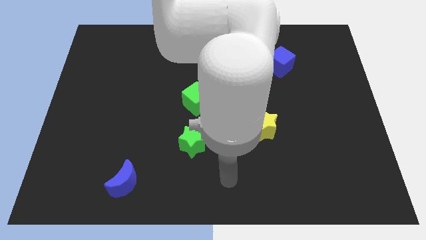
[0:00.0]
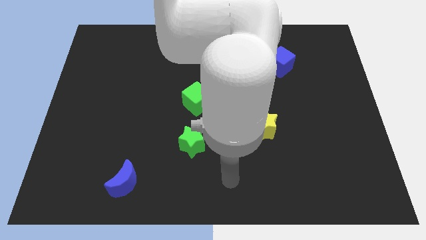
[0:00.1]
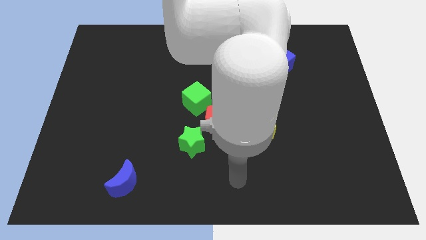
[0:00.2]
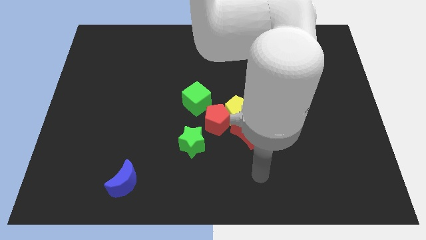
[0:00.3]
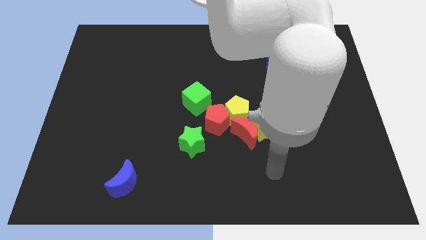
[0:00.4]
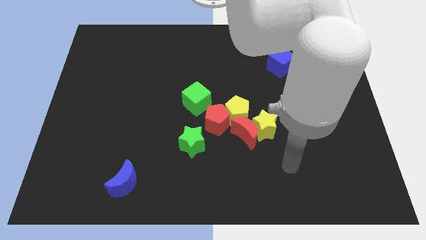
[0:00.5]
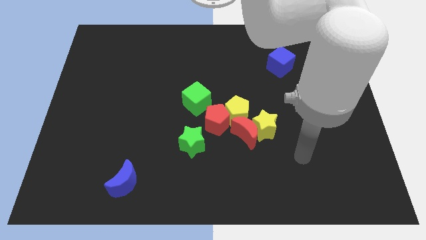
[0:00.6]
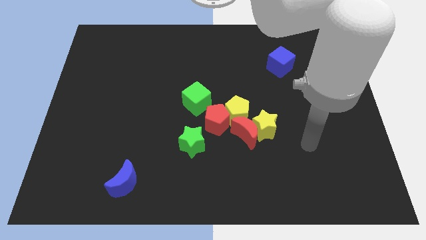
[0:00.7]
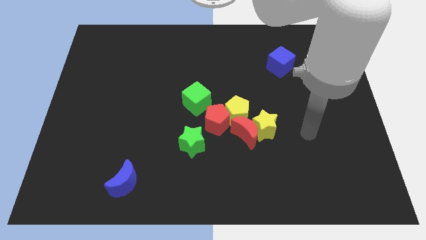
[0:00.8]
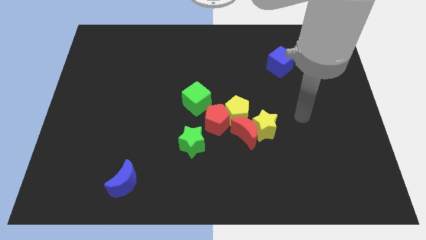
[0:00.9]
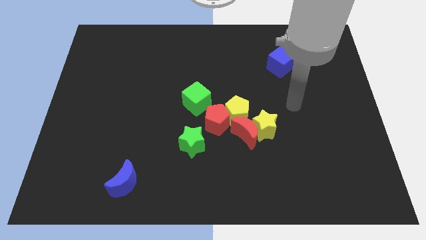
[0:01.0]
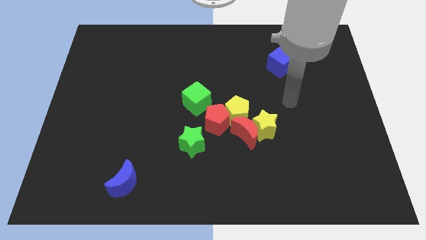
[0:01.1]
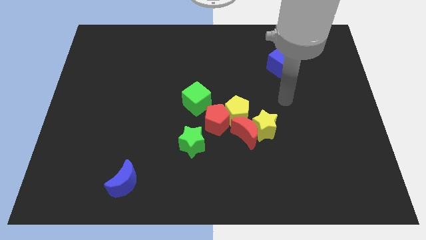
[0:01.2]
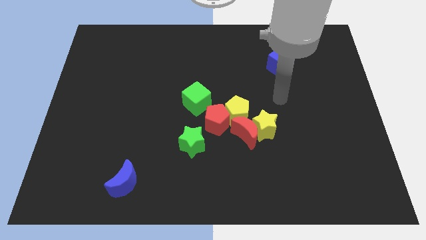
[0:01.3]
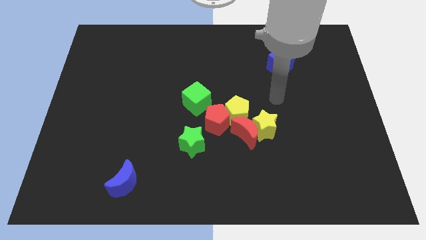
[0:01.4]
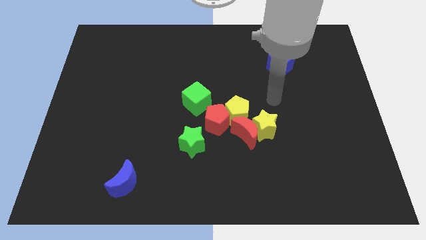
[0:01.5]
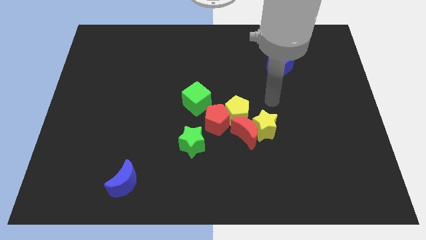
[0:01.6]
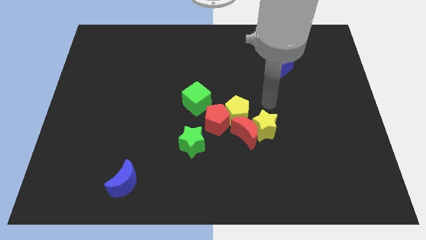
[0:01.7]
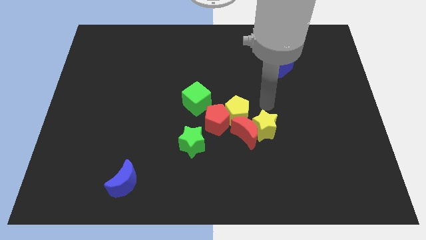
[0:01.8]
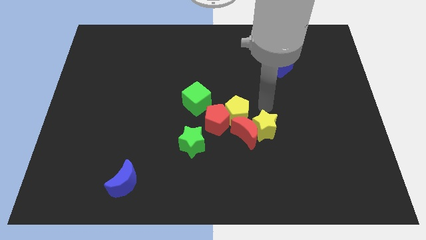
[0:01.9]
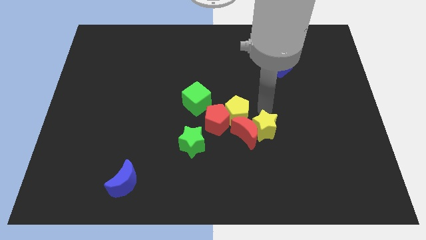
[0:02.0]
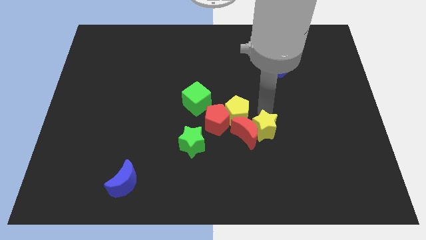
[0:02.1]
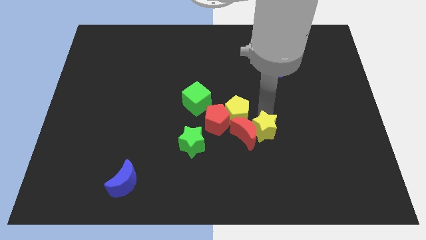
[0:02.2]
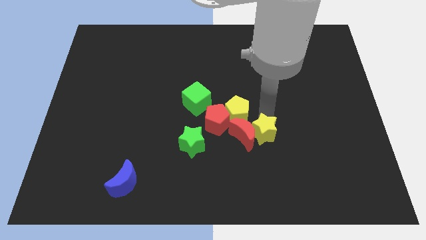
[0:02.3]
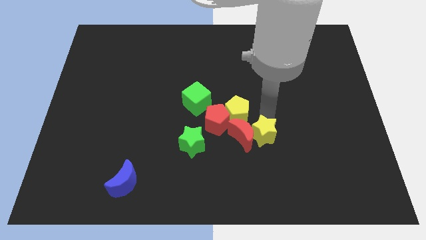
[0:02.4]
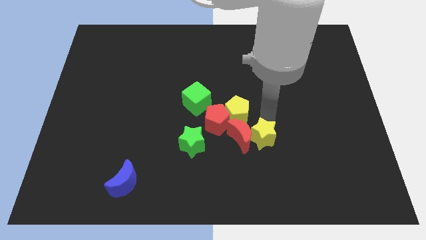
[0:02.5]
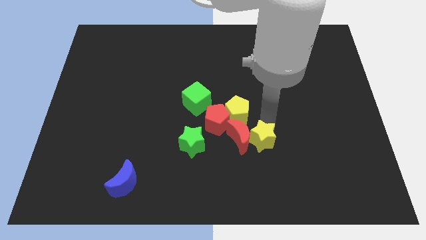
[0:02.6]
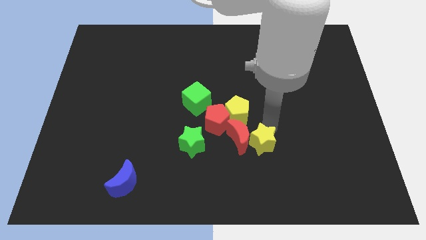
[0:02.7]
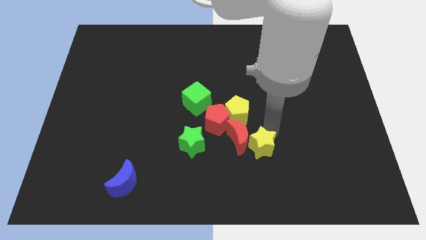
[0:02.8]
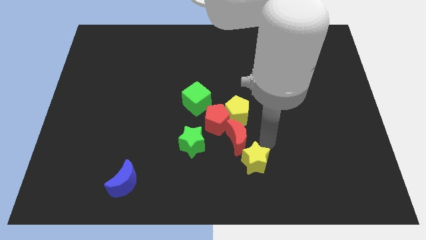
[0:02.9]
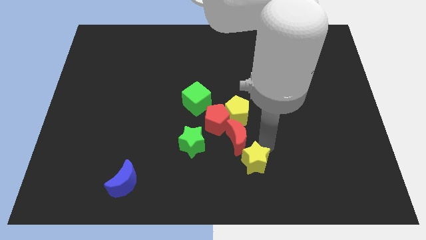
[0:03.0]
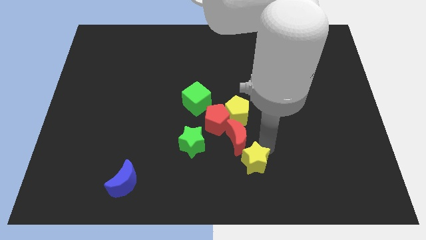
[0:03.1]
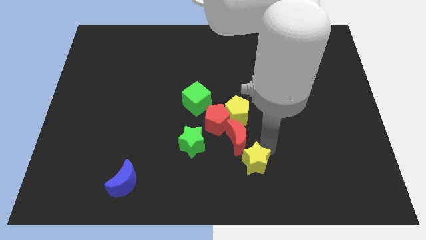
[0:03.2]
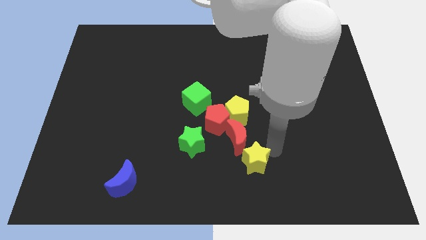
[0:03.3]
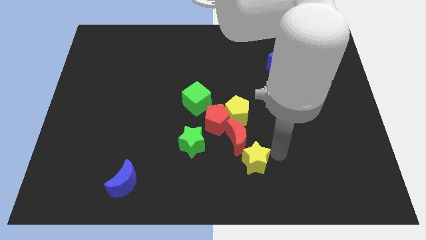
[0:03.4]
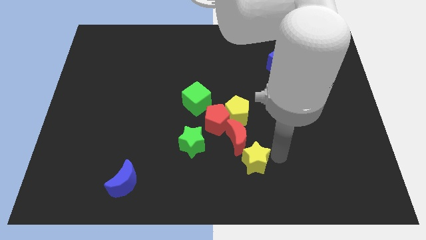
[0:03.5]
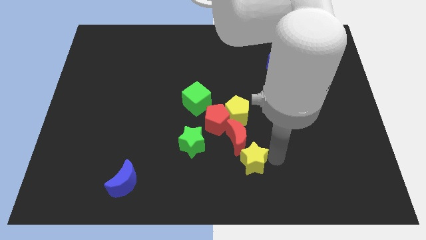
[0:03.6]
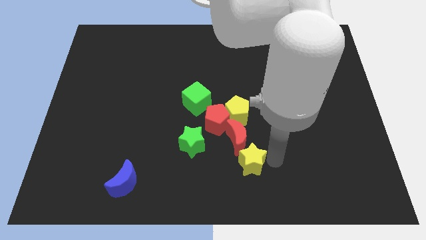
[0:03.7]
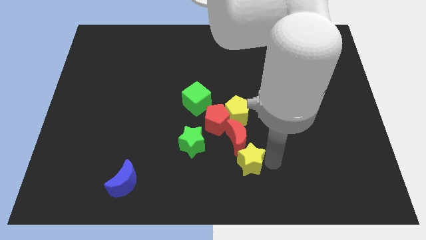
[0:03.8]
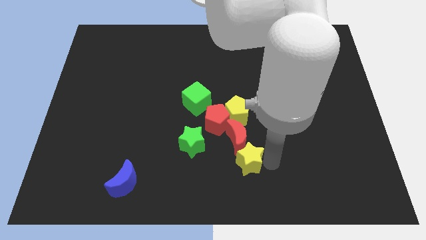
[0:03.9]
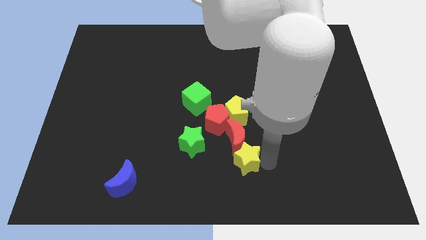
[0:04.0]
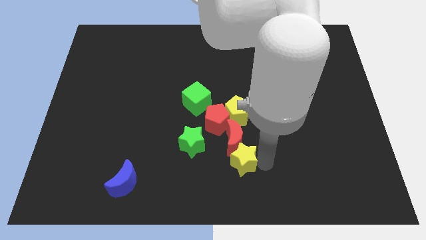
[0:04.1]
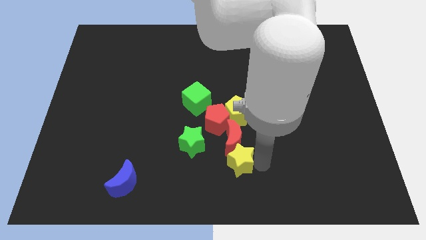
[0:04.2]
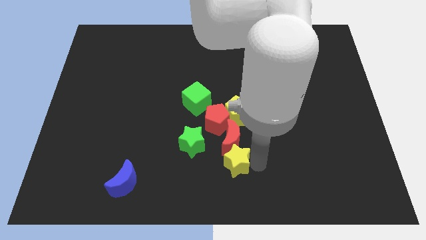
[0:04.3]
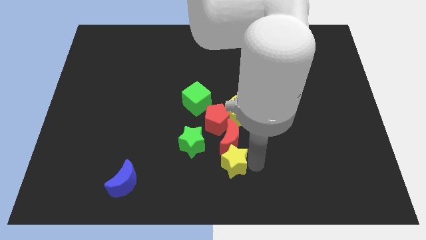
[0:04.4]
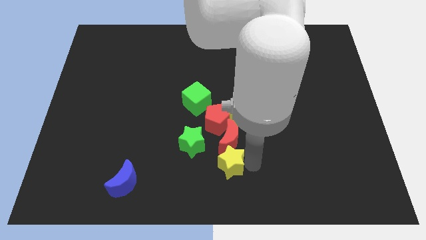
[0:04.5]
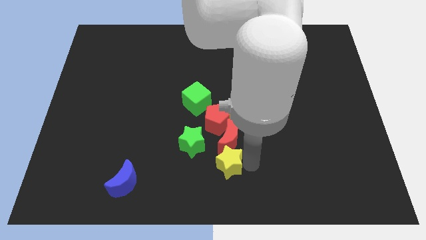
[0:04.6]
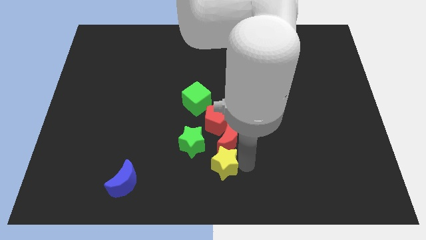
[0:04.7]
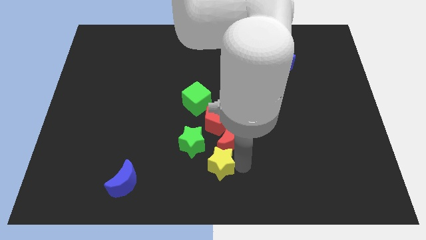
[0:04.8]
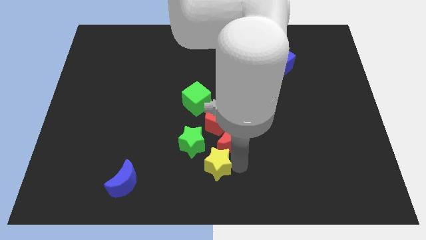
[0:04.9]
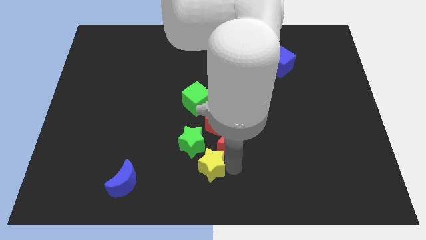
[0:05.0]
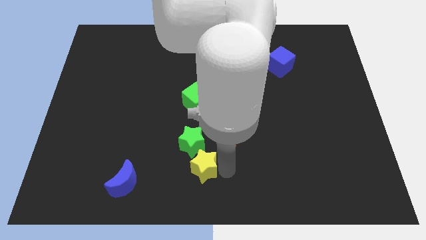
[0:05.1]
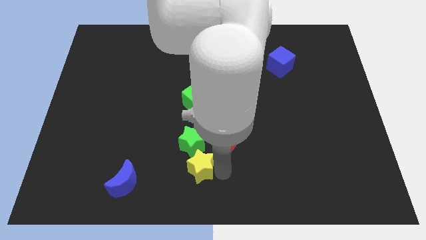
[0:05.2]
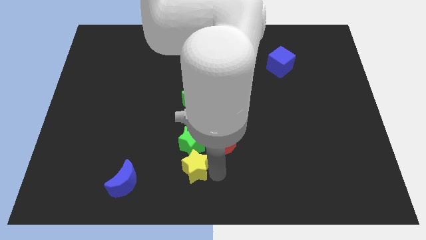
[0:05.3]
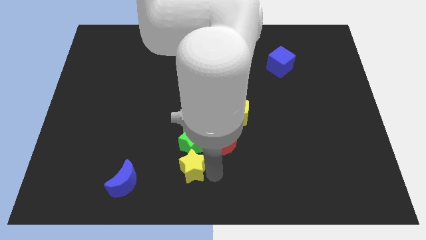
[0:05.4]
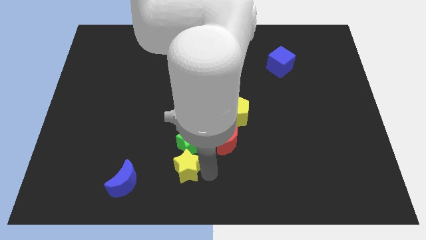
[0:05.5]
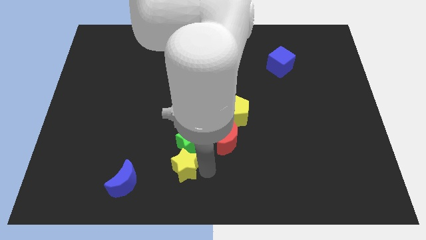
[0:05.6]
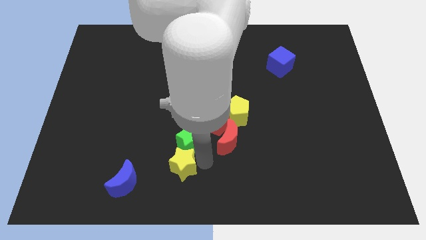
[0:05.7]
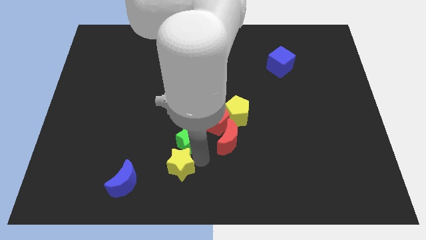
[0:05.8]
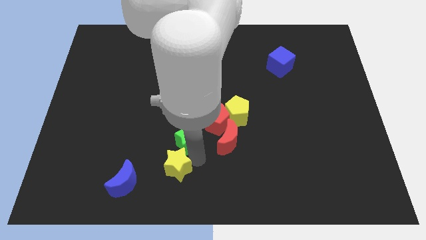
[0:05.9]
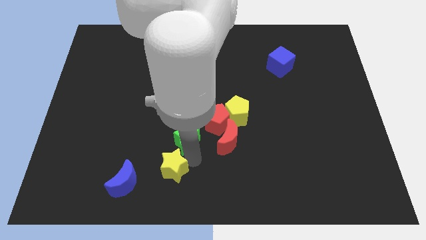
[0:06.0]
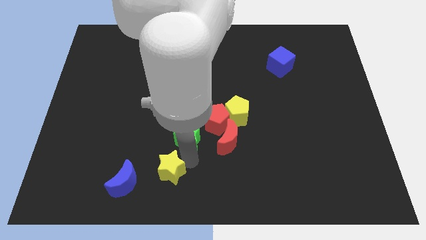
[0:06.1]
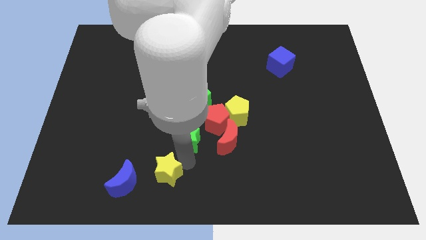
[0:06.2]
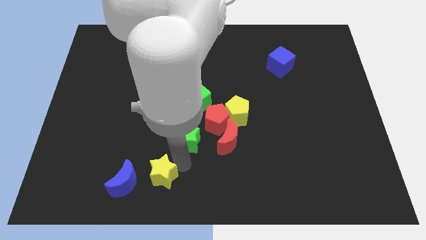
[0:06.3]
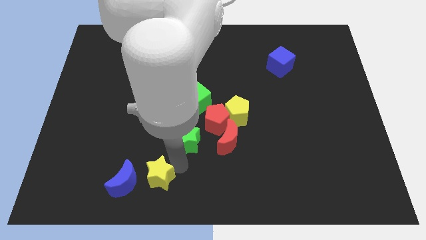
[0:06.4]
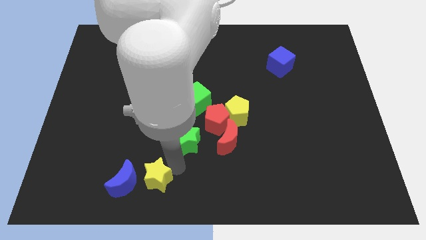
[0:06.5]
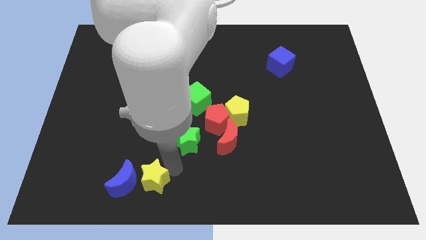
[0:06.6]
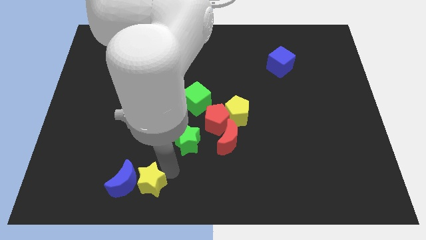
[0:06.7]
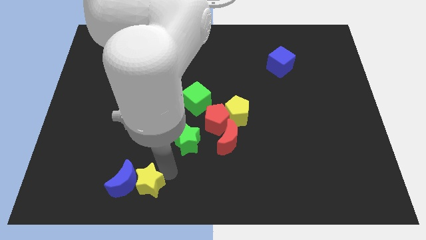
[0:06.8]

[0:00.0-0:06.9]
slide the yellow star to the blue moon

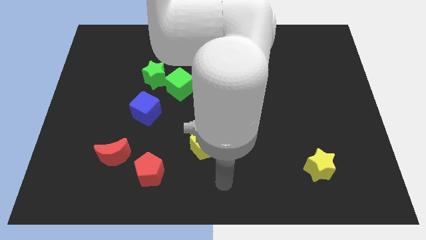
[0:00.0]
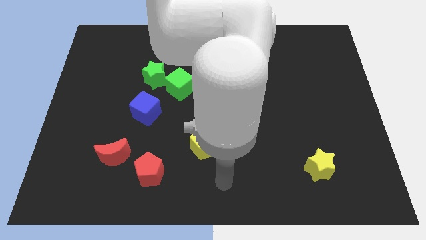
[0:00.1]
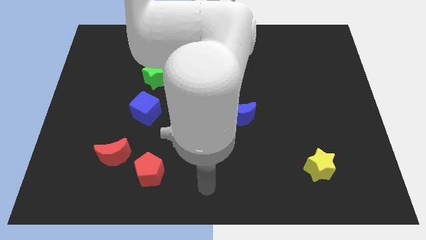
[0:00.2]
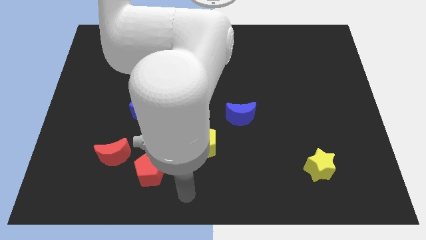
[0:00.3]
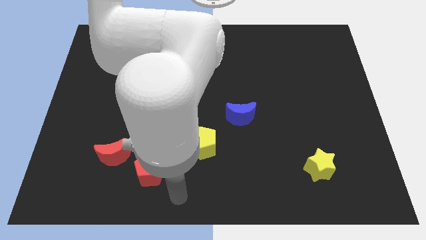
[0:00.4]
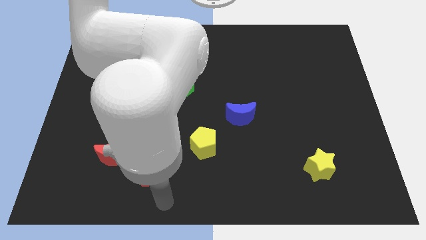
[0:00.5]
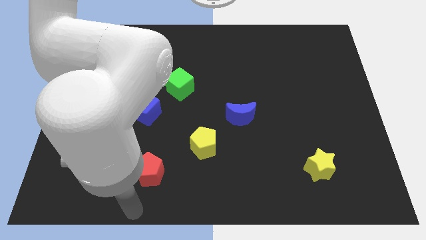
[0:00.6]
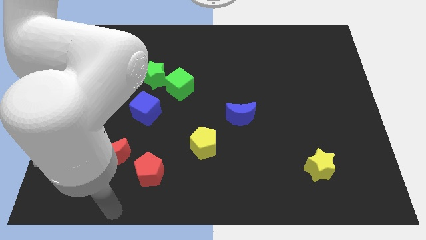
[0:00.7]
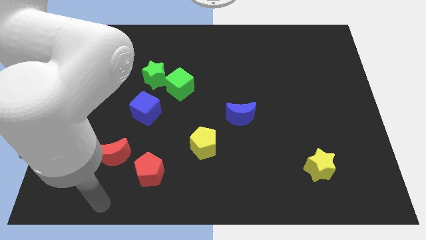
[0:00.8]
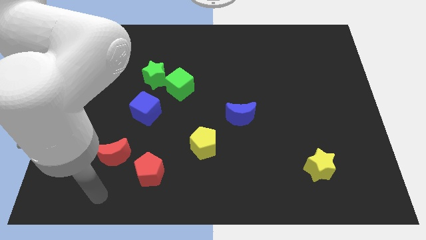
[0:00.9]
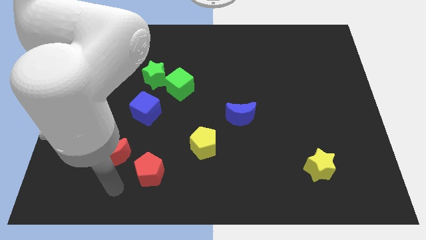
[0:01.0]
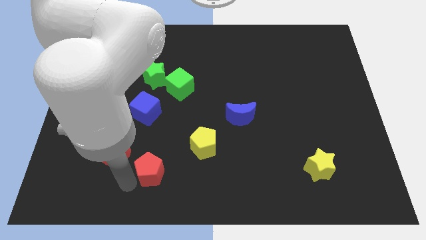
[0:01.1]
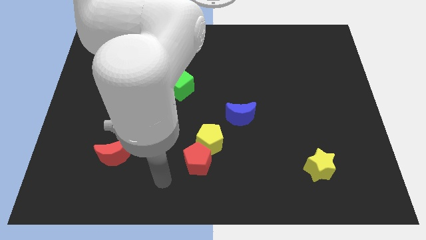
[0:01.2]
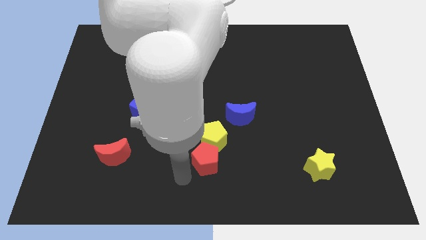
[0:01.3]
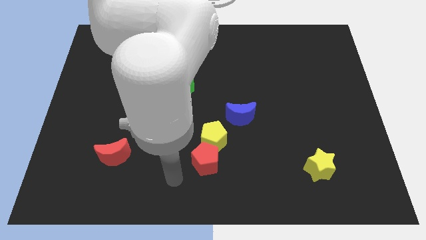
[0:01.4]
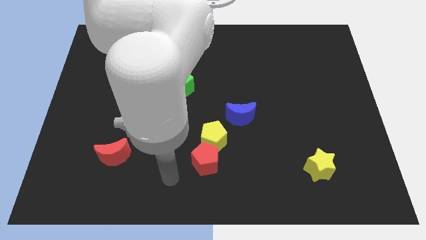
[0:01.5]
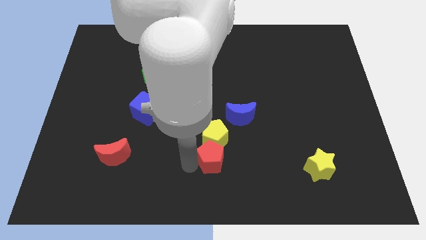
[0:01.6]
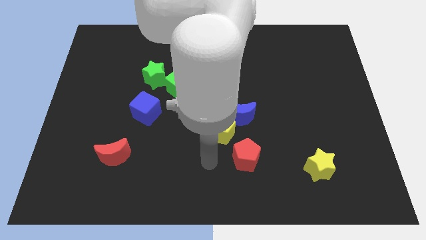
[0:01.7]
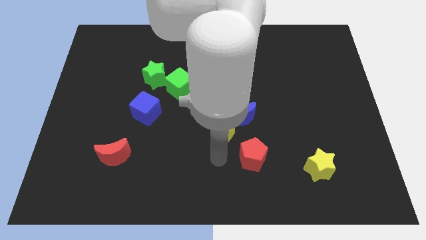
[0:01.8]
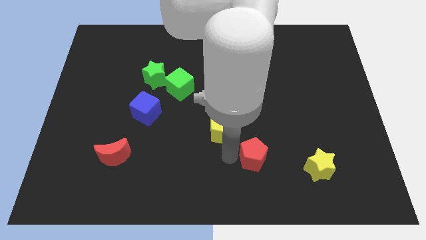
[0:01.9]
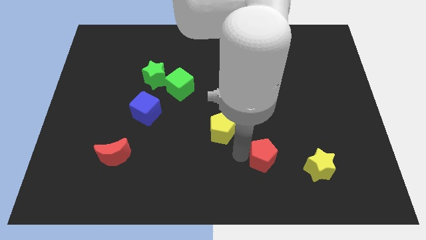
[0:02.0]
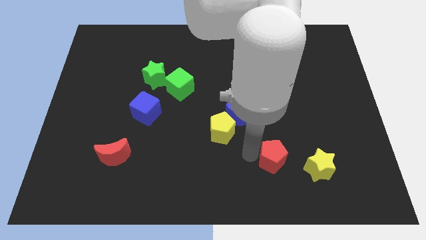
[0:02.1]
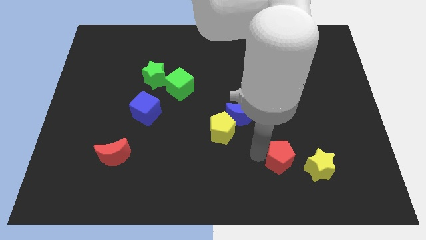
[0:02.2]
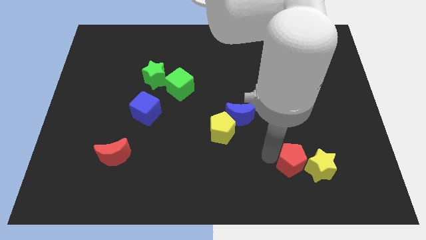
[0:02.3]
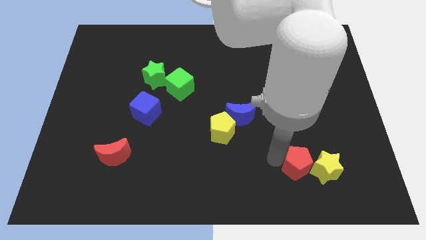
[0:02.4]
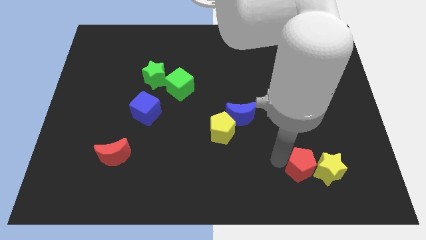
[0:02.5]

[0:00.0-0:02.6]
push the red pentagon towards the yellow star
